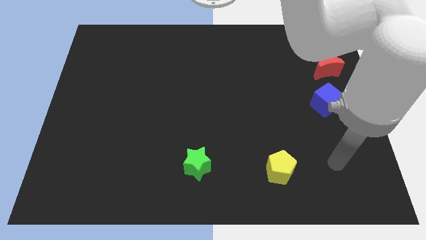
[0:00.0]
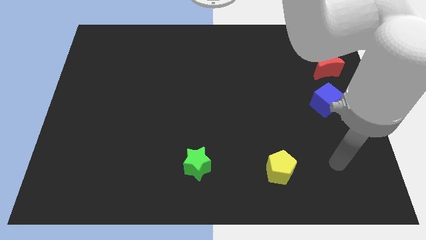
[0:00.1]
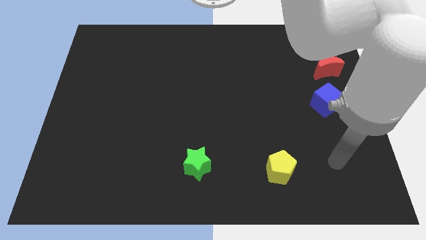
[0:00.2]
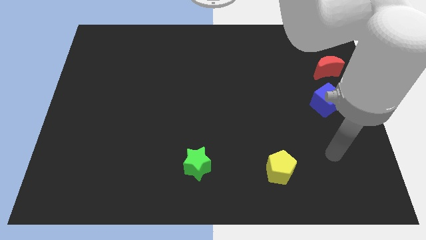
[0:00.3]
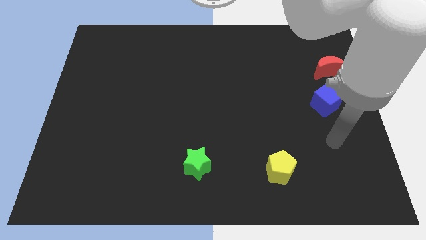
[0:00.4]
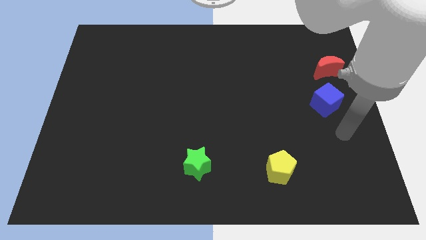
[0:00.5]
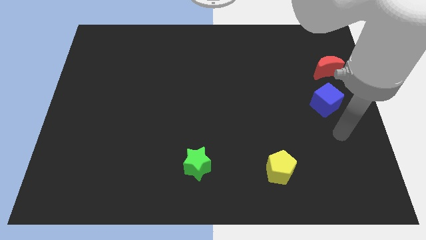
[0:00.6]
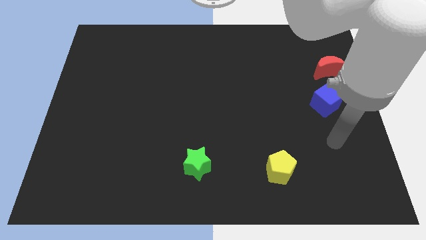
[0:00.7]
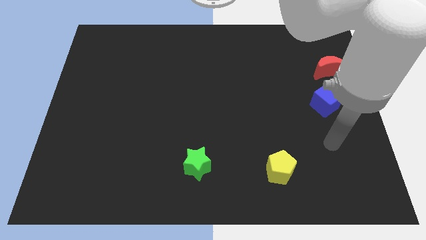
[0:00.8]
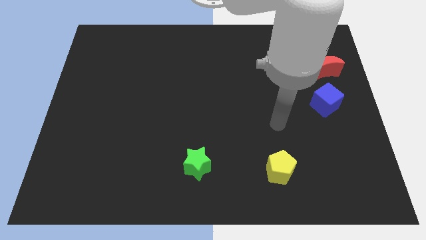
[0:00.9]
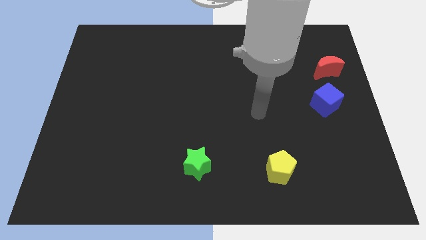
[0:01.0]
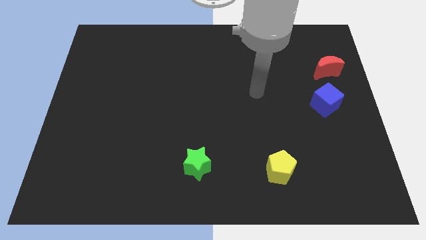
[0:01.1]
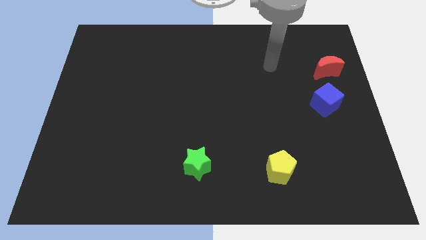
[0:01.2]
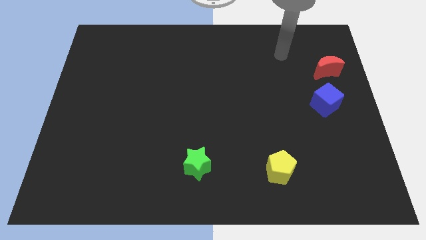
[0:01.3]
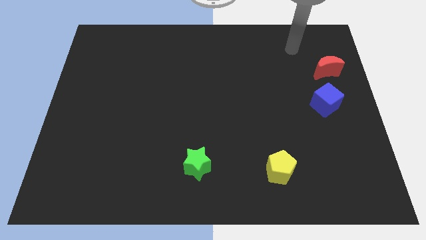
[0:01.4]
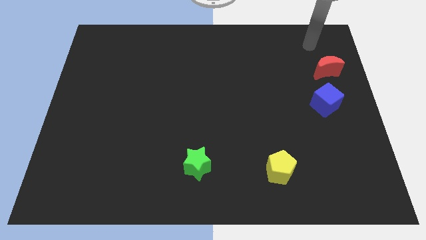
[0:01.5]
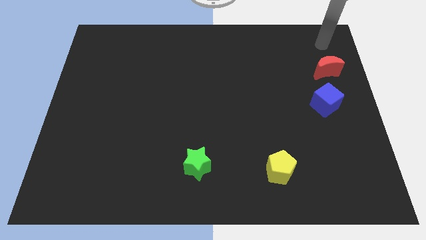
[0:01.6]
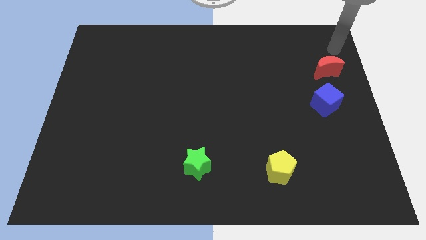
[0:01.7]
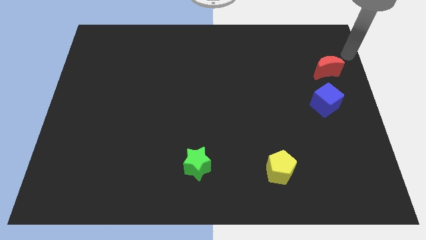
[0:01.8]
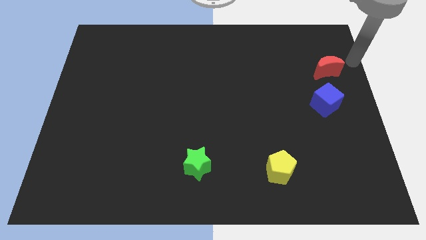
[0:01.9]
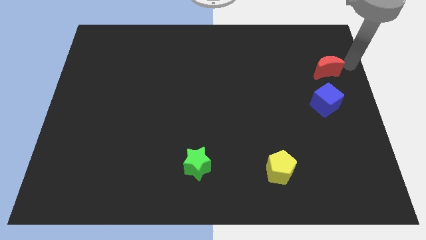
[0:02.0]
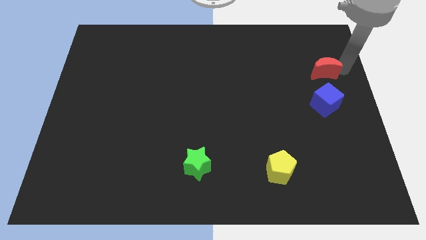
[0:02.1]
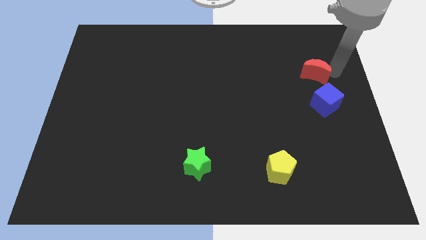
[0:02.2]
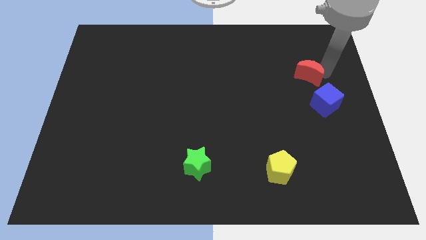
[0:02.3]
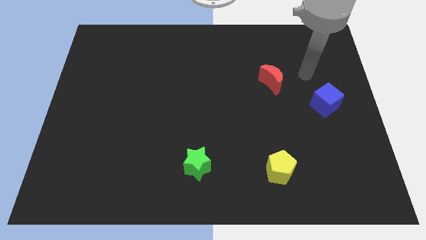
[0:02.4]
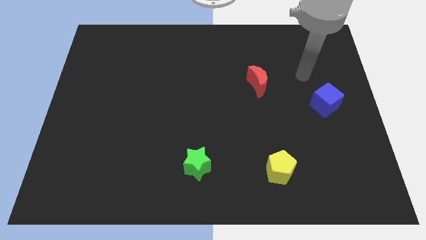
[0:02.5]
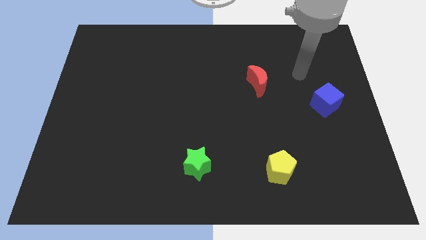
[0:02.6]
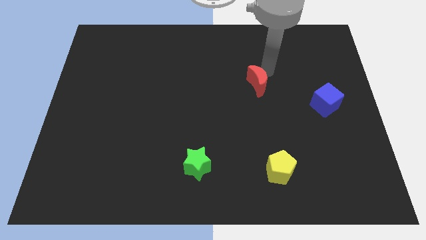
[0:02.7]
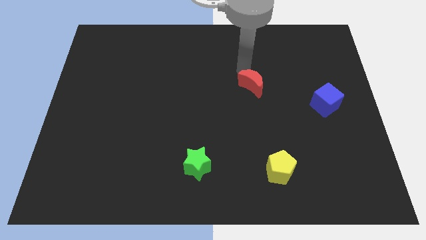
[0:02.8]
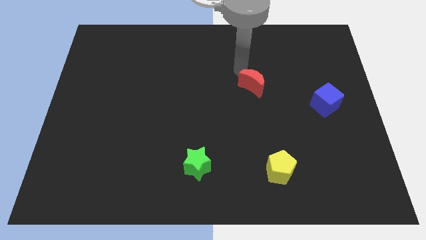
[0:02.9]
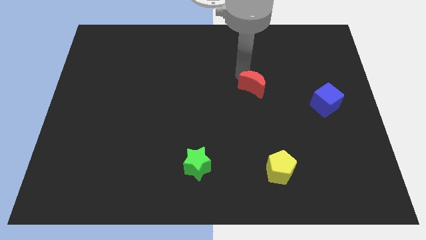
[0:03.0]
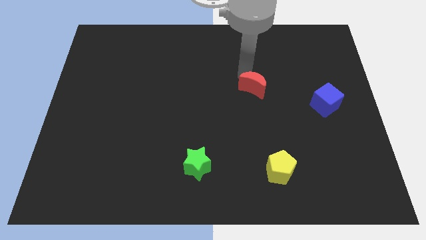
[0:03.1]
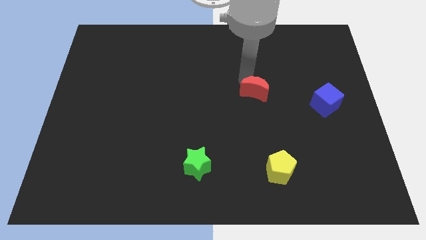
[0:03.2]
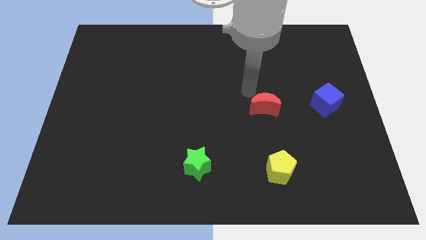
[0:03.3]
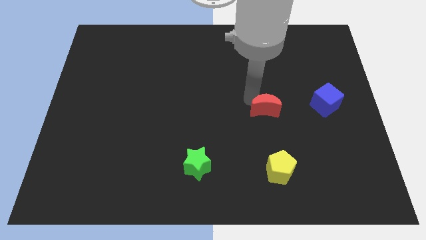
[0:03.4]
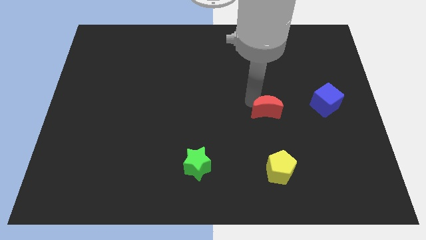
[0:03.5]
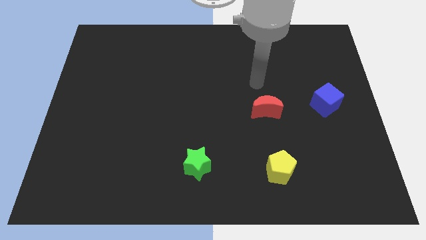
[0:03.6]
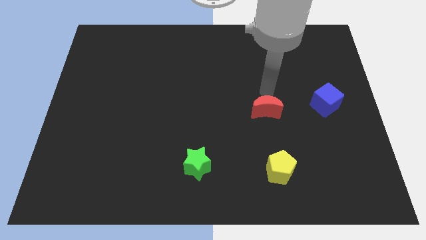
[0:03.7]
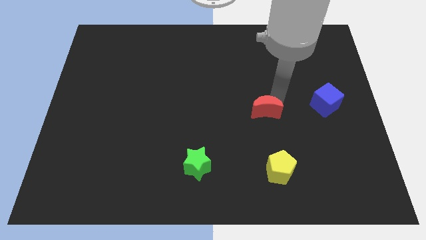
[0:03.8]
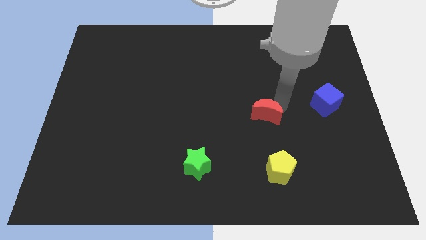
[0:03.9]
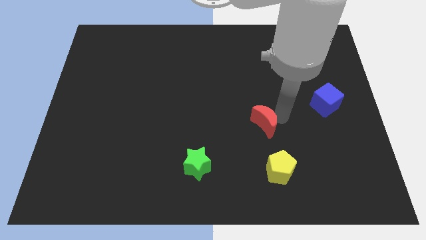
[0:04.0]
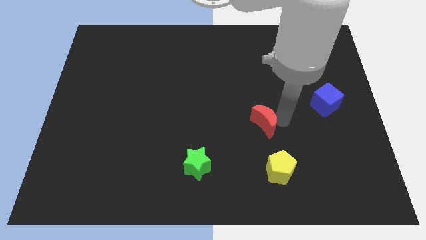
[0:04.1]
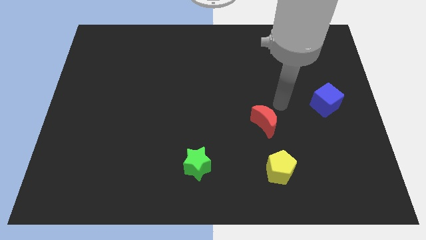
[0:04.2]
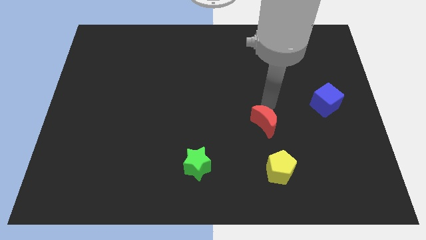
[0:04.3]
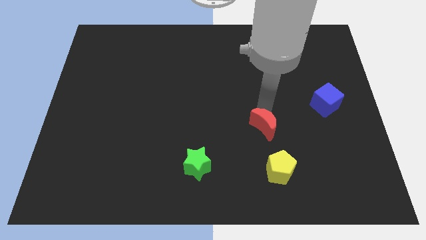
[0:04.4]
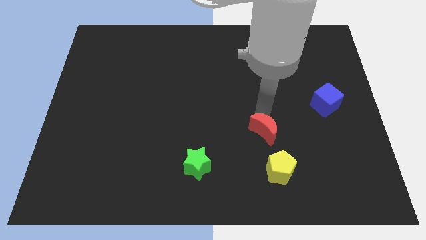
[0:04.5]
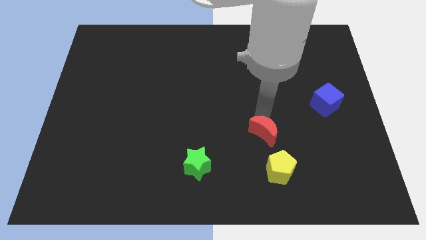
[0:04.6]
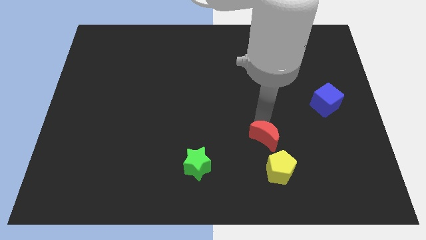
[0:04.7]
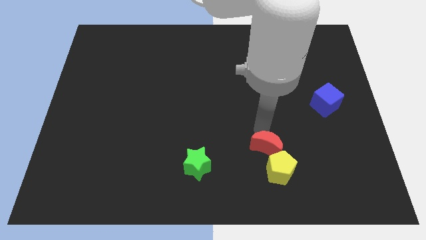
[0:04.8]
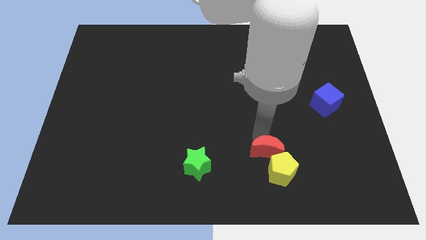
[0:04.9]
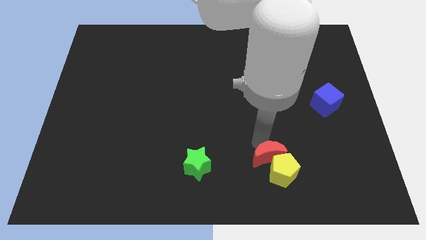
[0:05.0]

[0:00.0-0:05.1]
push the moon next to the pentagon

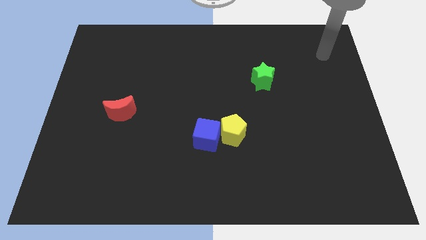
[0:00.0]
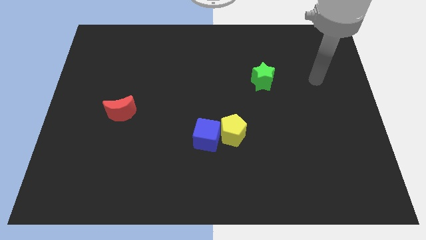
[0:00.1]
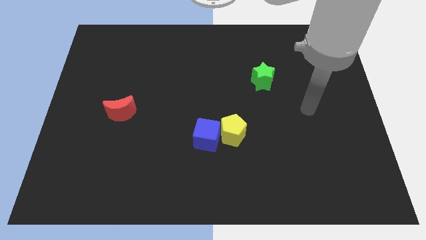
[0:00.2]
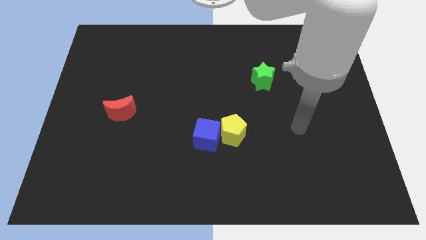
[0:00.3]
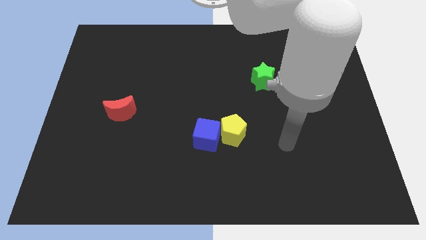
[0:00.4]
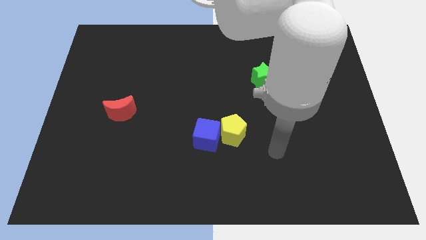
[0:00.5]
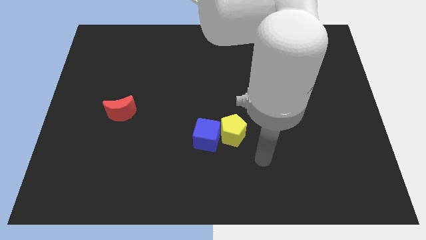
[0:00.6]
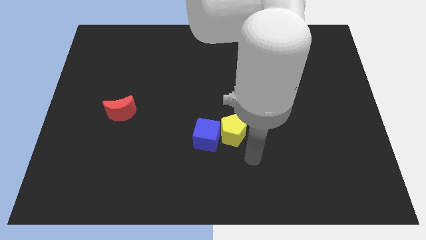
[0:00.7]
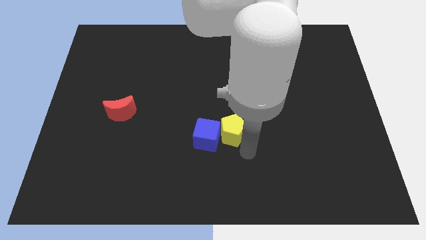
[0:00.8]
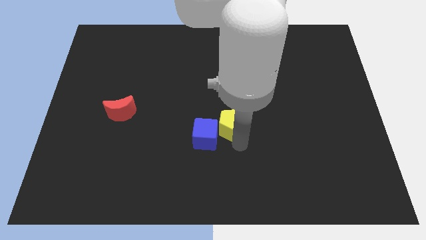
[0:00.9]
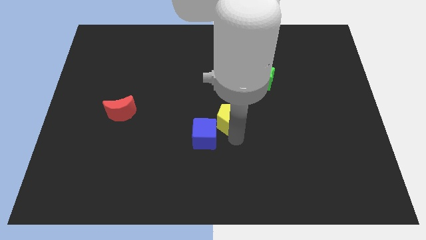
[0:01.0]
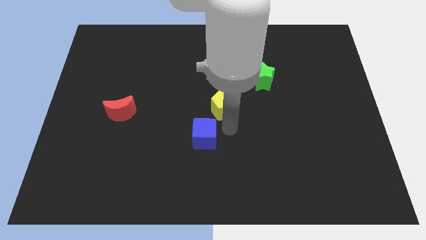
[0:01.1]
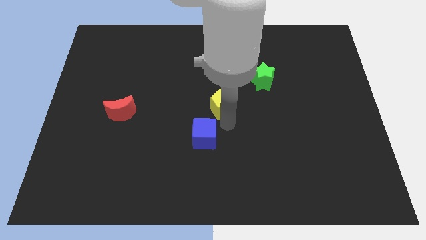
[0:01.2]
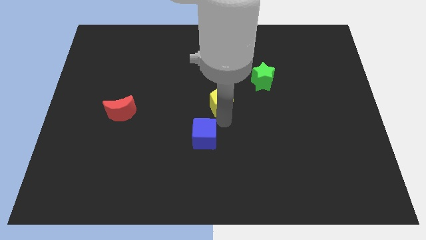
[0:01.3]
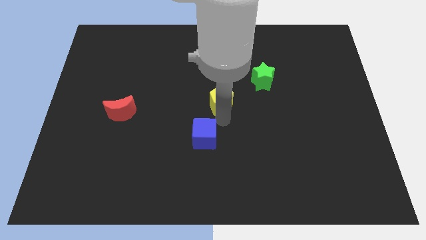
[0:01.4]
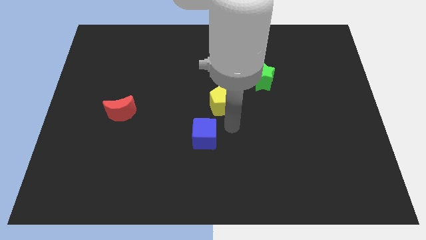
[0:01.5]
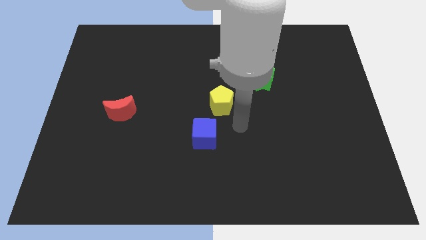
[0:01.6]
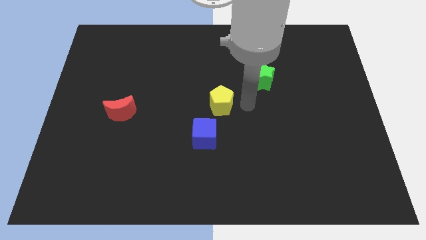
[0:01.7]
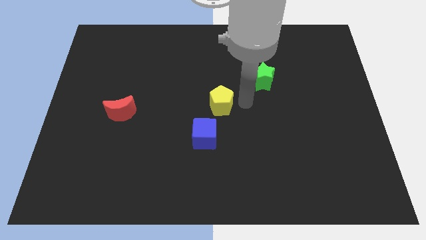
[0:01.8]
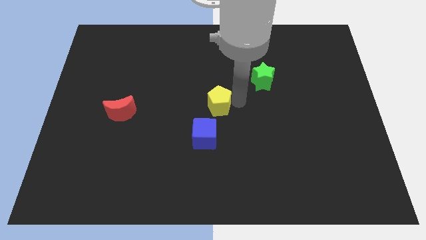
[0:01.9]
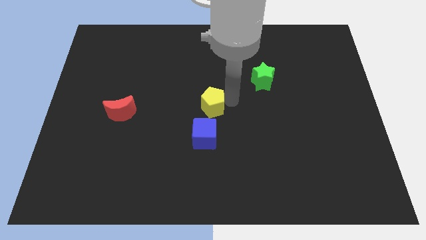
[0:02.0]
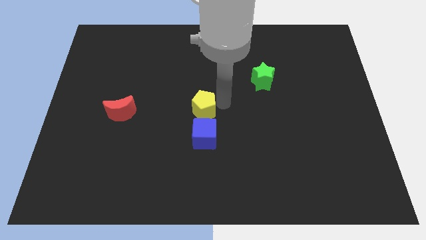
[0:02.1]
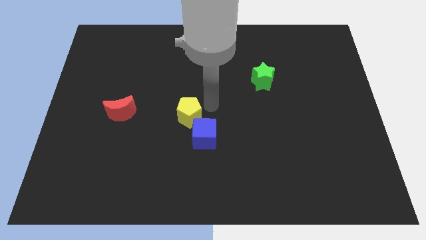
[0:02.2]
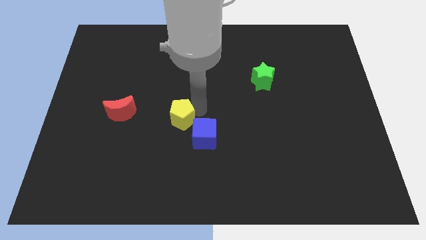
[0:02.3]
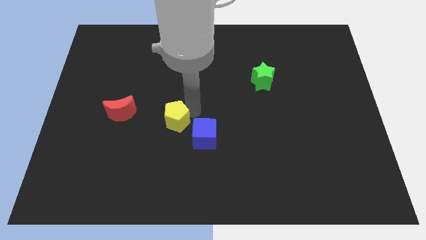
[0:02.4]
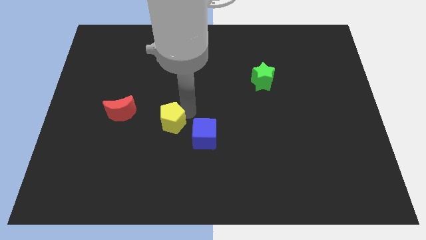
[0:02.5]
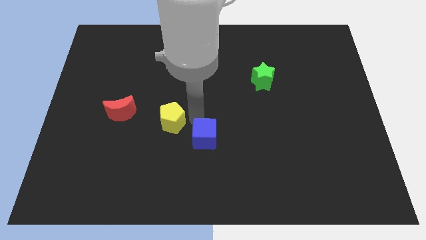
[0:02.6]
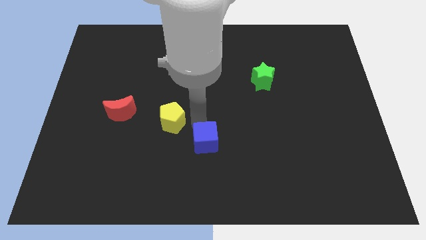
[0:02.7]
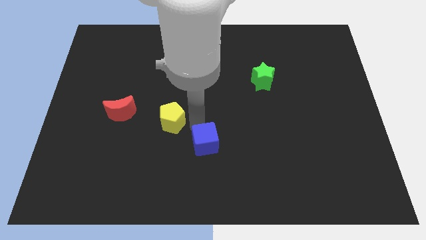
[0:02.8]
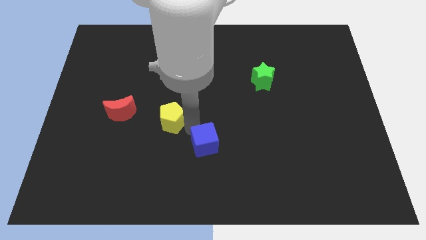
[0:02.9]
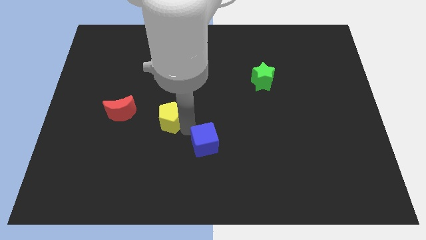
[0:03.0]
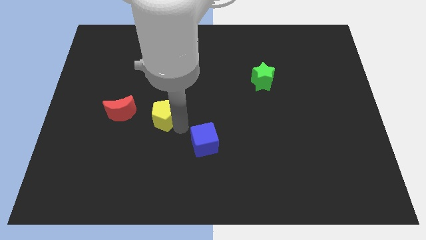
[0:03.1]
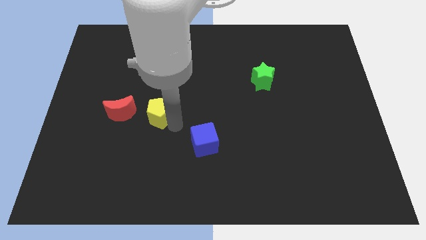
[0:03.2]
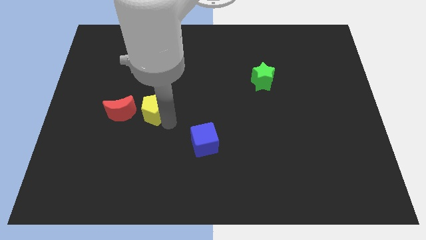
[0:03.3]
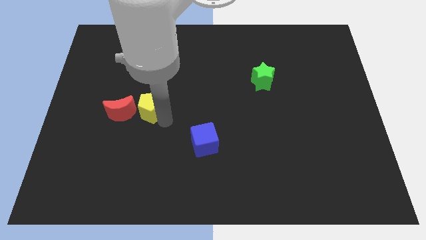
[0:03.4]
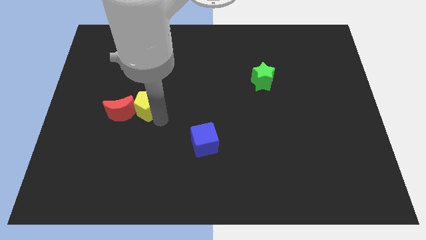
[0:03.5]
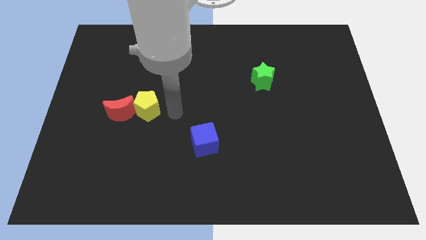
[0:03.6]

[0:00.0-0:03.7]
slide the yellow pentagon close to the red block
